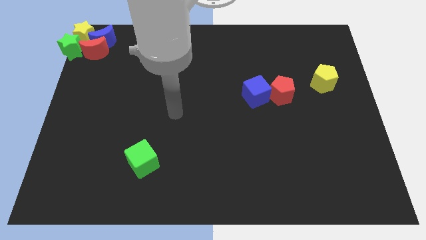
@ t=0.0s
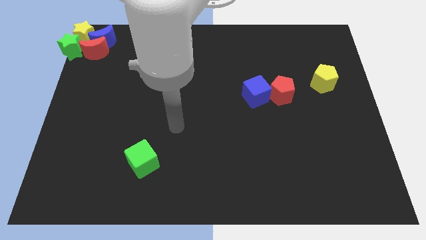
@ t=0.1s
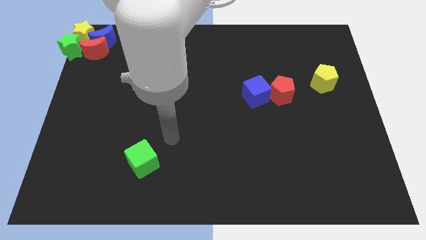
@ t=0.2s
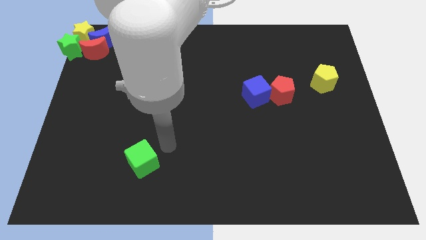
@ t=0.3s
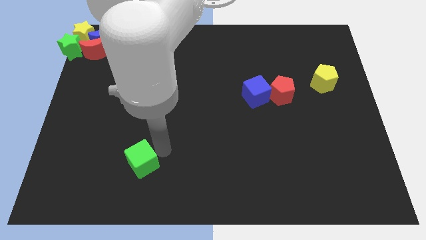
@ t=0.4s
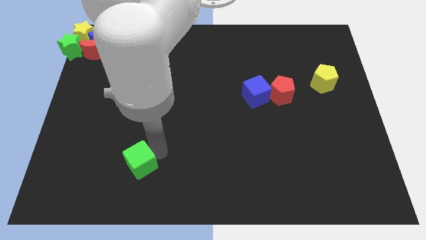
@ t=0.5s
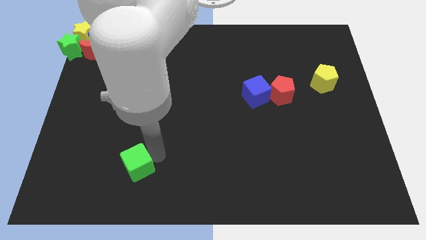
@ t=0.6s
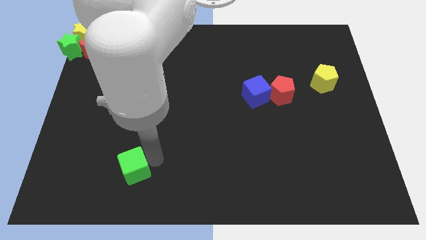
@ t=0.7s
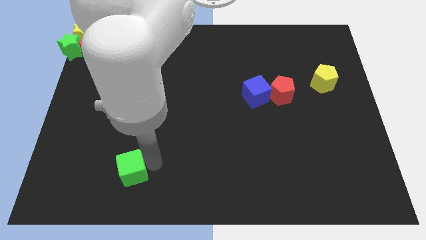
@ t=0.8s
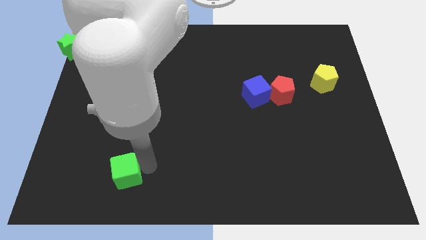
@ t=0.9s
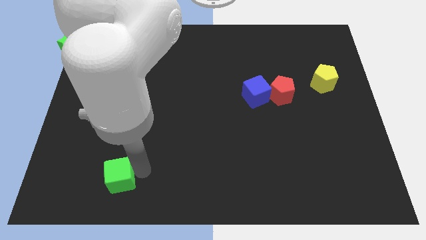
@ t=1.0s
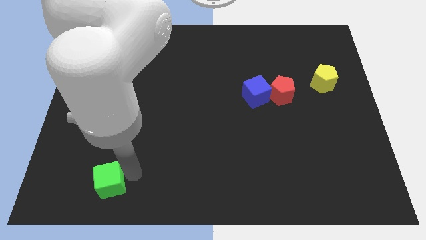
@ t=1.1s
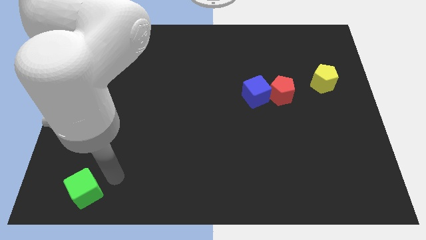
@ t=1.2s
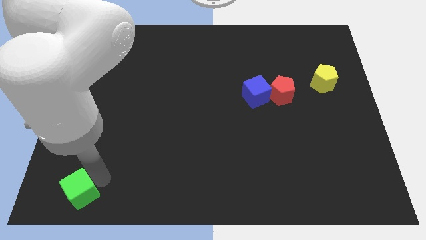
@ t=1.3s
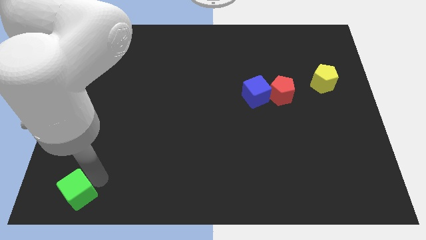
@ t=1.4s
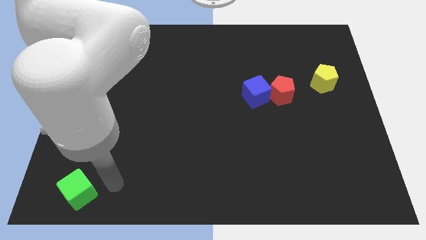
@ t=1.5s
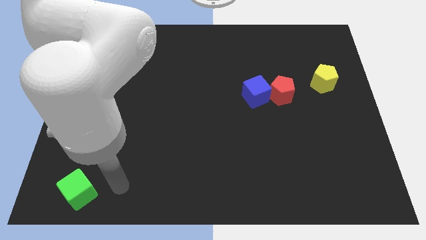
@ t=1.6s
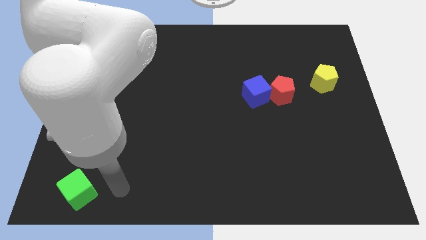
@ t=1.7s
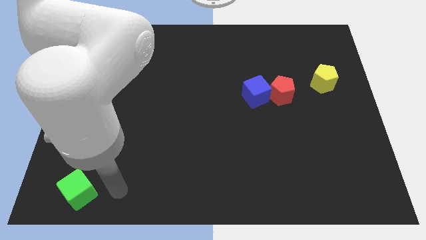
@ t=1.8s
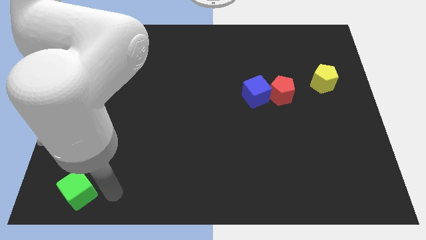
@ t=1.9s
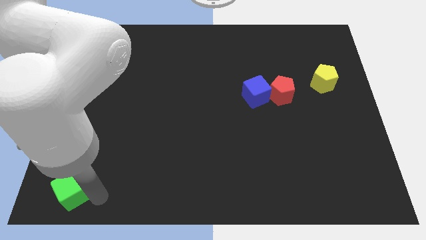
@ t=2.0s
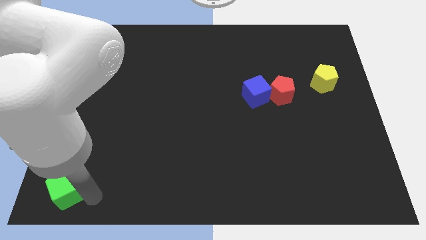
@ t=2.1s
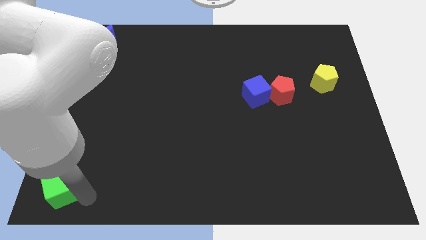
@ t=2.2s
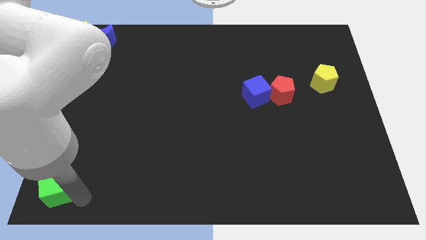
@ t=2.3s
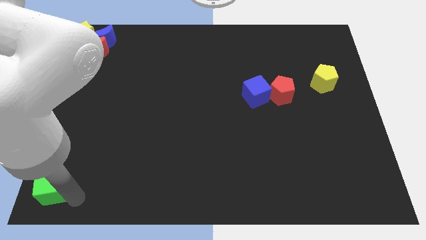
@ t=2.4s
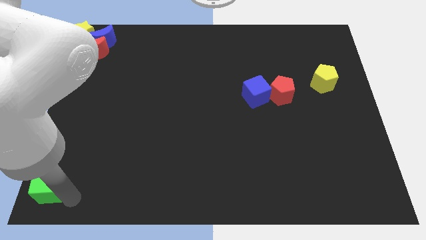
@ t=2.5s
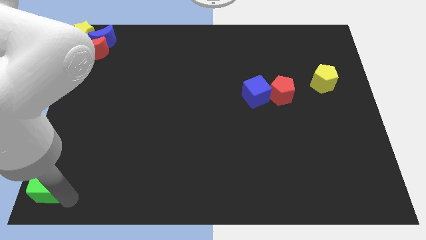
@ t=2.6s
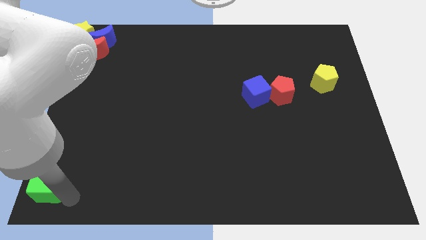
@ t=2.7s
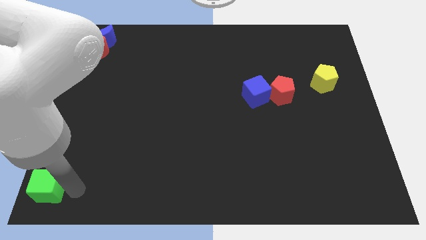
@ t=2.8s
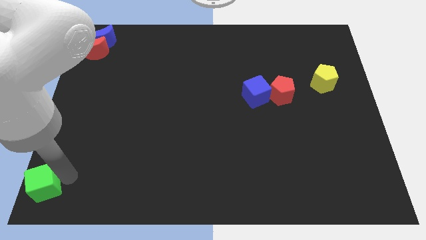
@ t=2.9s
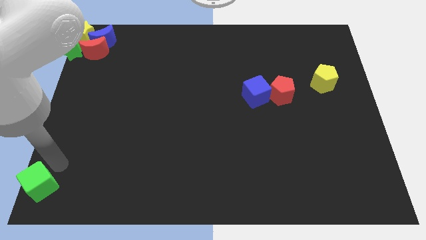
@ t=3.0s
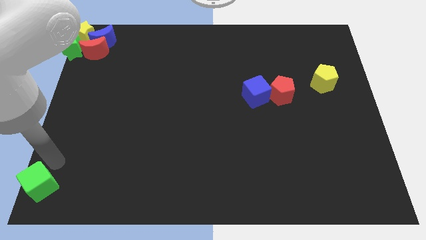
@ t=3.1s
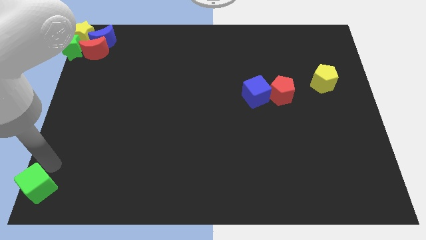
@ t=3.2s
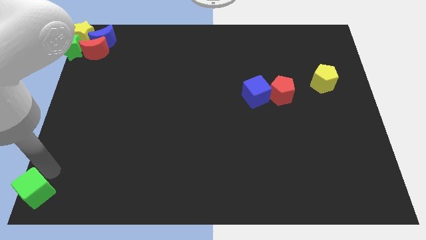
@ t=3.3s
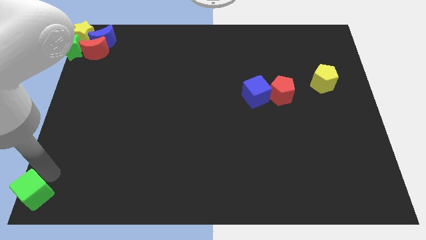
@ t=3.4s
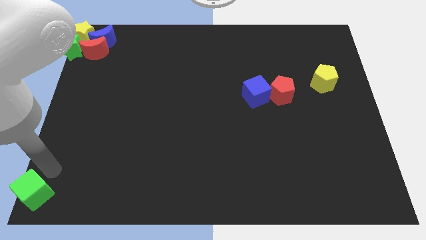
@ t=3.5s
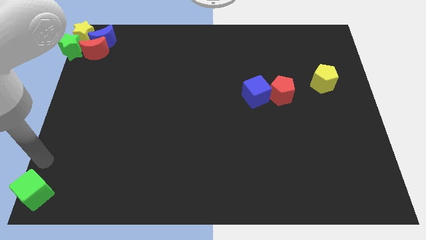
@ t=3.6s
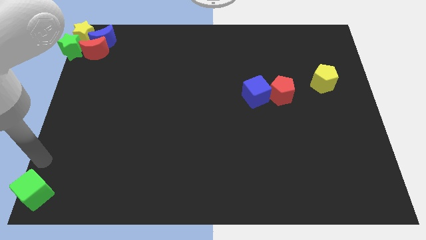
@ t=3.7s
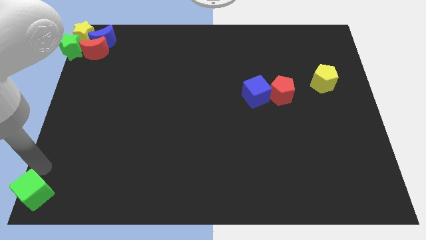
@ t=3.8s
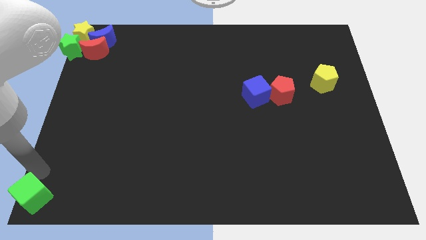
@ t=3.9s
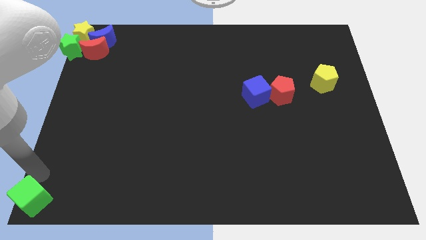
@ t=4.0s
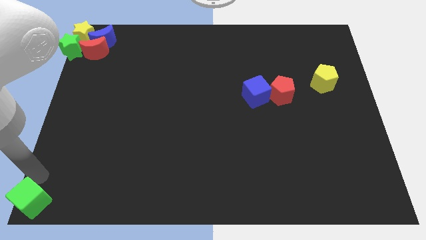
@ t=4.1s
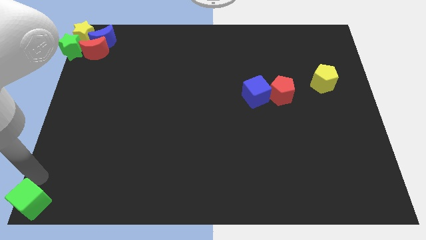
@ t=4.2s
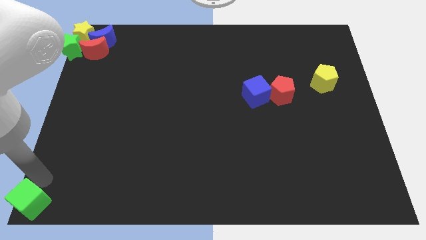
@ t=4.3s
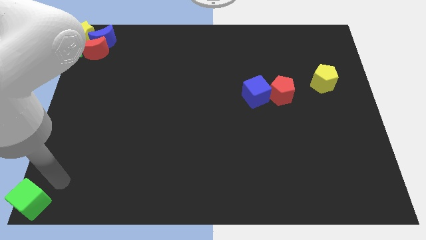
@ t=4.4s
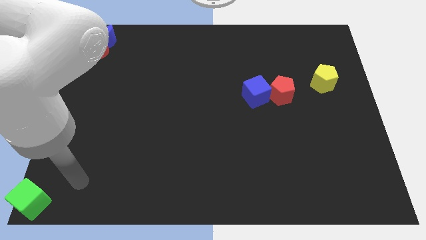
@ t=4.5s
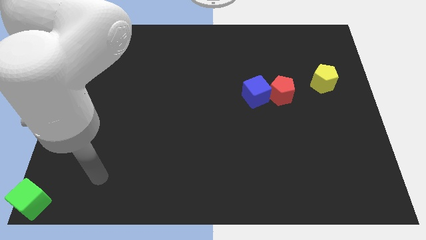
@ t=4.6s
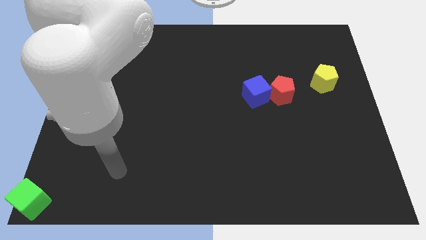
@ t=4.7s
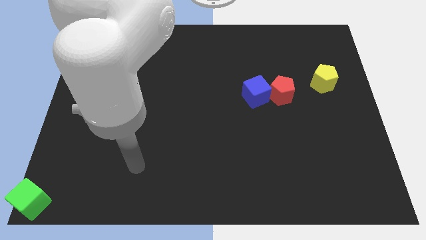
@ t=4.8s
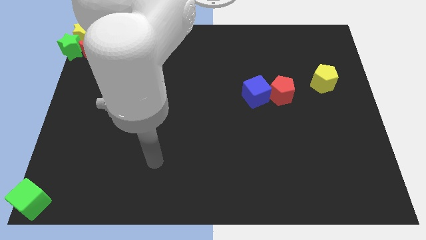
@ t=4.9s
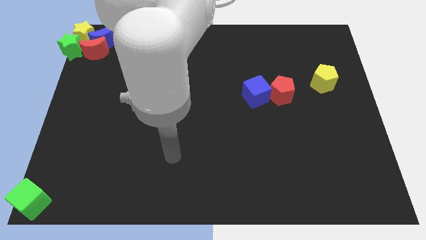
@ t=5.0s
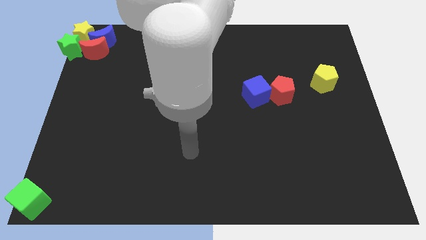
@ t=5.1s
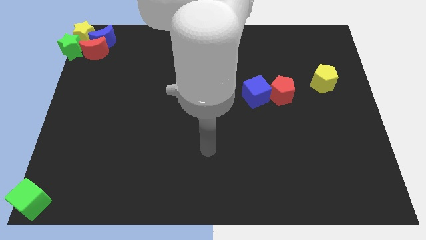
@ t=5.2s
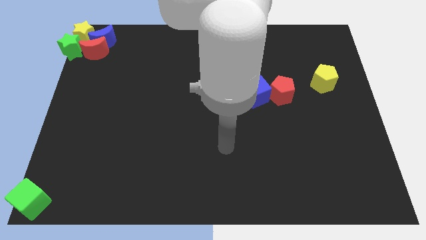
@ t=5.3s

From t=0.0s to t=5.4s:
push the green cube to the bottom left of board

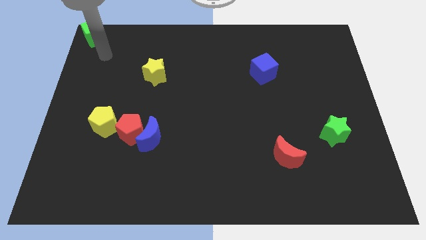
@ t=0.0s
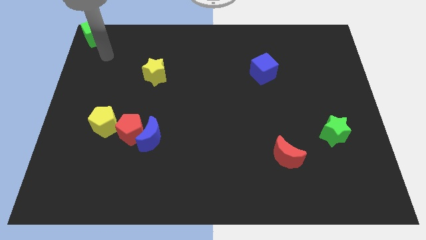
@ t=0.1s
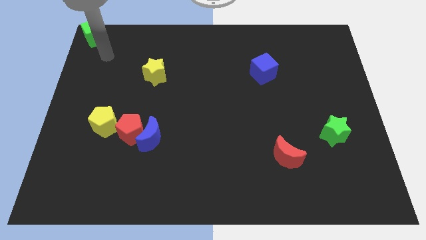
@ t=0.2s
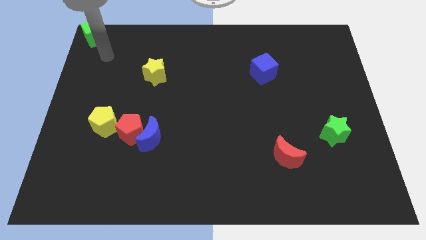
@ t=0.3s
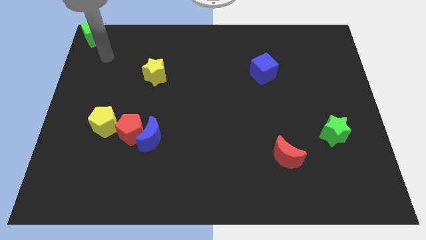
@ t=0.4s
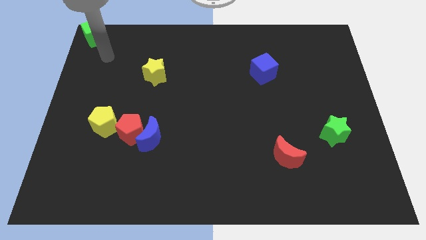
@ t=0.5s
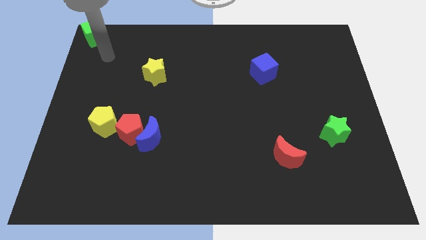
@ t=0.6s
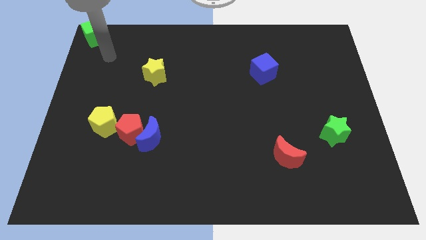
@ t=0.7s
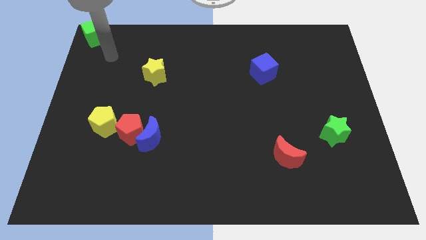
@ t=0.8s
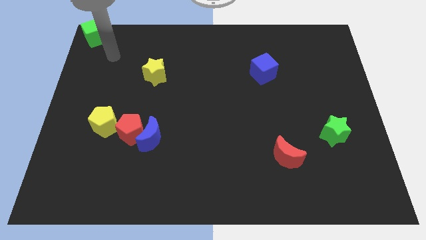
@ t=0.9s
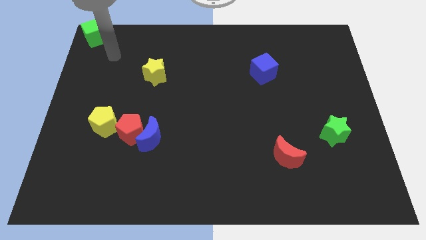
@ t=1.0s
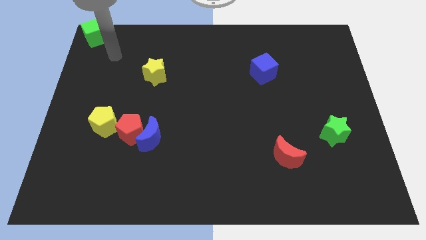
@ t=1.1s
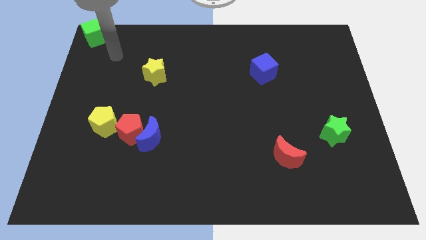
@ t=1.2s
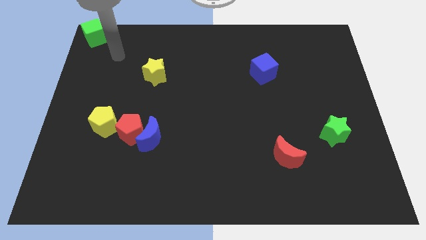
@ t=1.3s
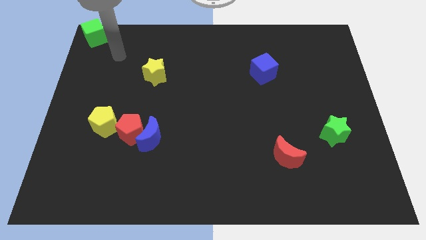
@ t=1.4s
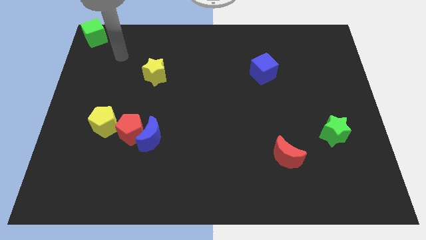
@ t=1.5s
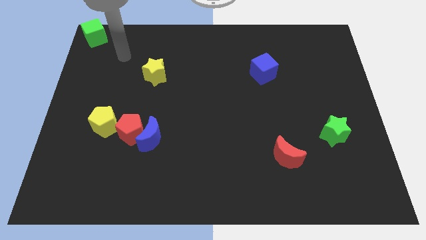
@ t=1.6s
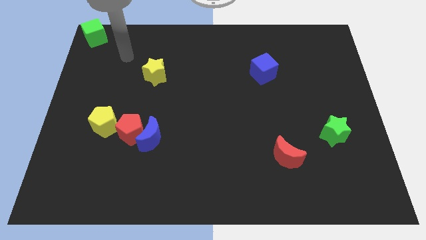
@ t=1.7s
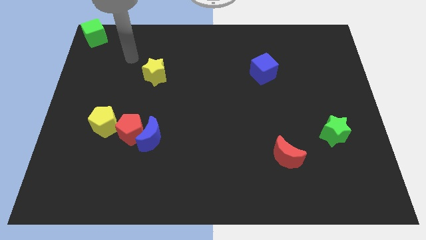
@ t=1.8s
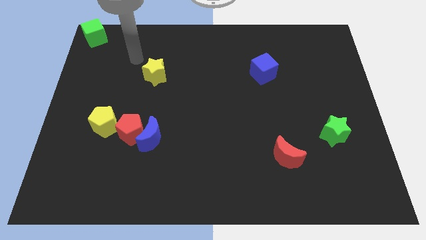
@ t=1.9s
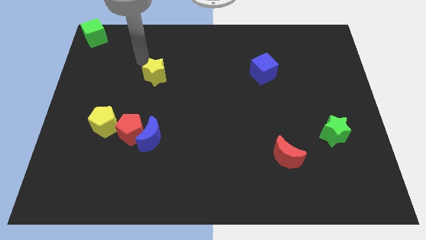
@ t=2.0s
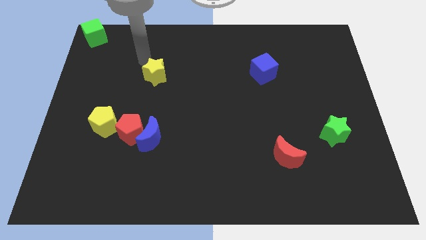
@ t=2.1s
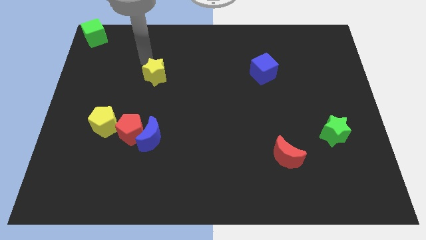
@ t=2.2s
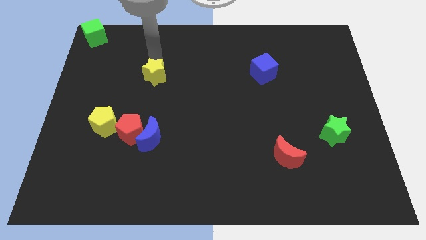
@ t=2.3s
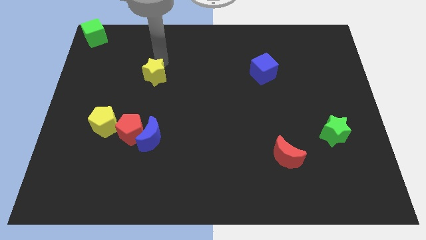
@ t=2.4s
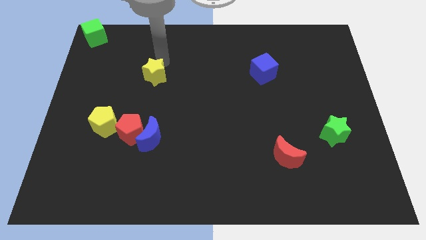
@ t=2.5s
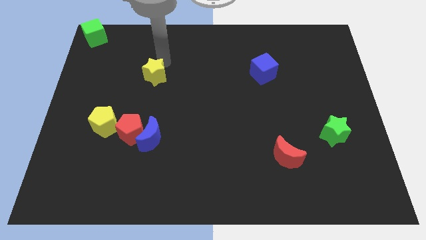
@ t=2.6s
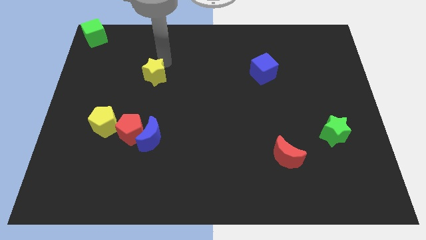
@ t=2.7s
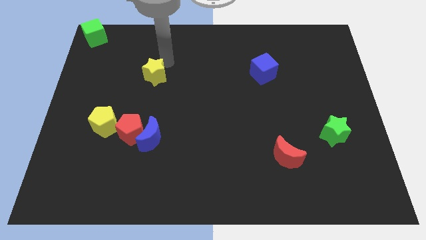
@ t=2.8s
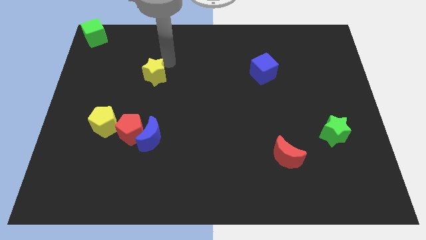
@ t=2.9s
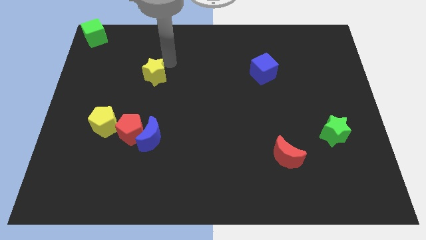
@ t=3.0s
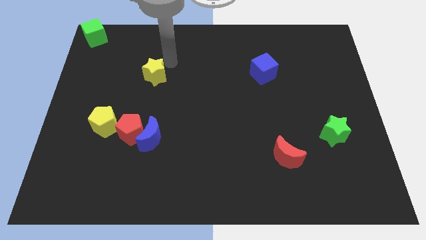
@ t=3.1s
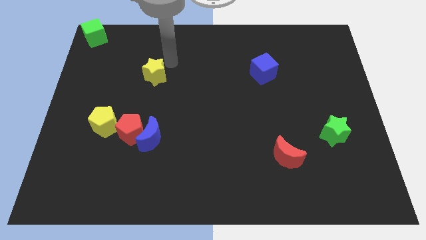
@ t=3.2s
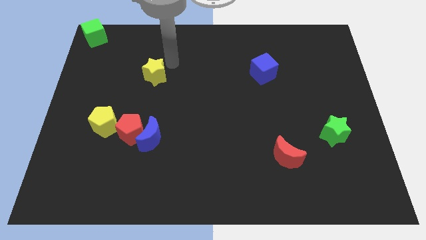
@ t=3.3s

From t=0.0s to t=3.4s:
move the arm to the right of yellow star

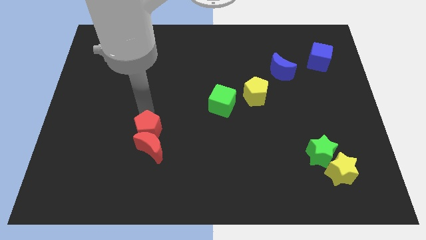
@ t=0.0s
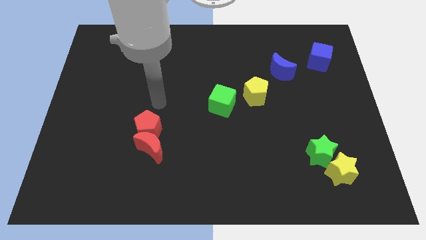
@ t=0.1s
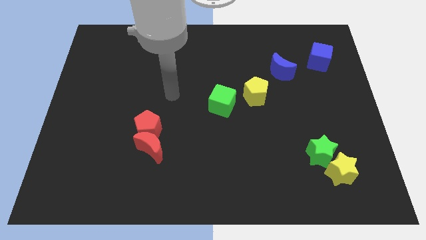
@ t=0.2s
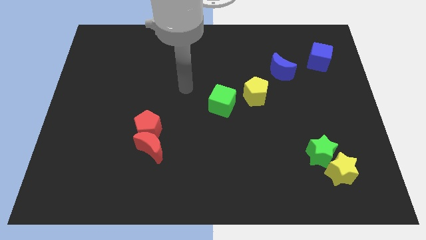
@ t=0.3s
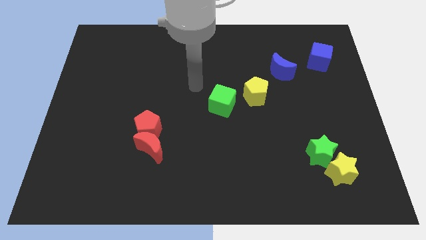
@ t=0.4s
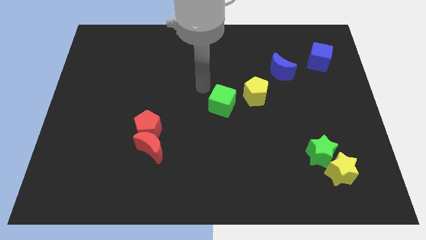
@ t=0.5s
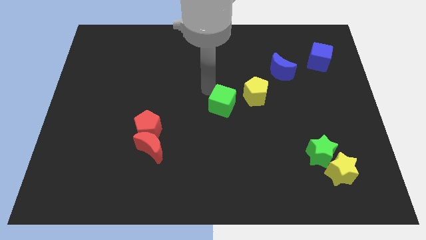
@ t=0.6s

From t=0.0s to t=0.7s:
move your arm to the top of the green cube
